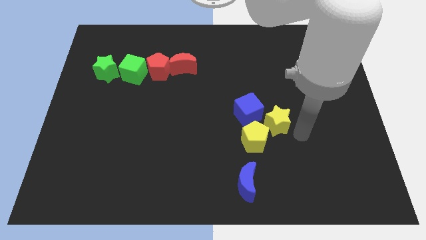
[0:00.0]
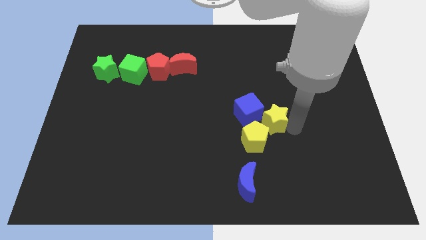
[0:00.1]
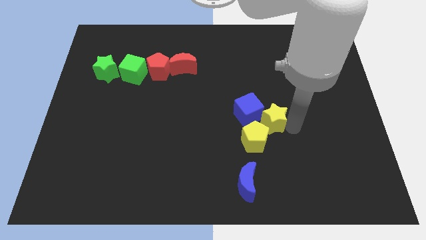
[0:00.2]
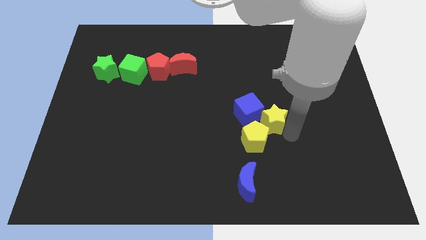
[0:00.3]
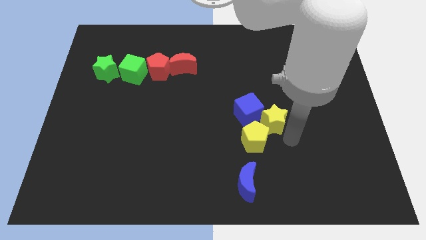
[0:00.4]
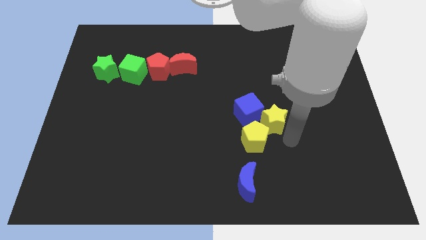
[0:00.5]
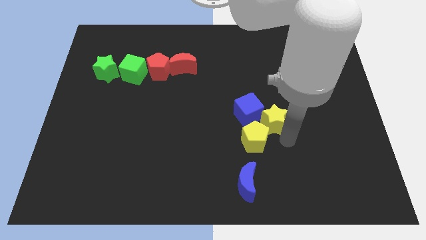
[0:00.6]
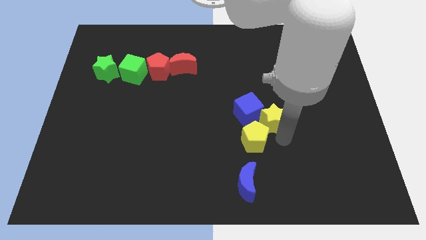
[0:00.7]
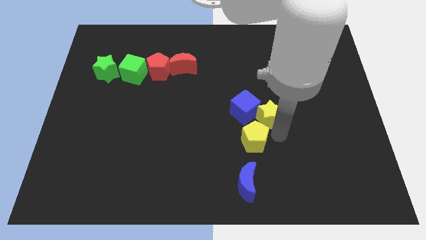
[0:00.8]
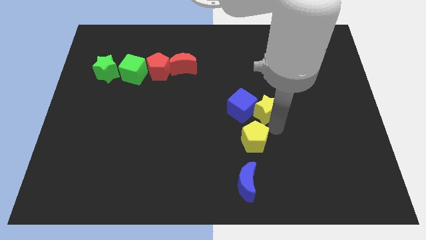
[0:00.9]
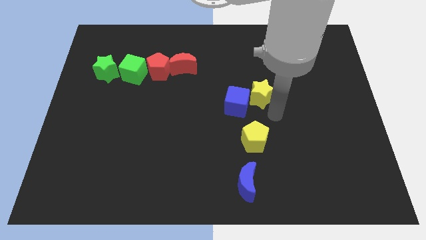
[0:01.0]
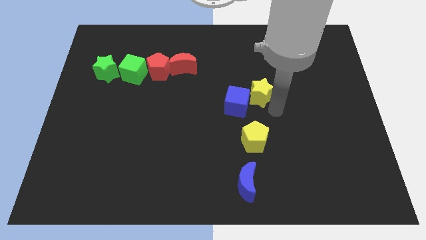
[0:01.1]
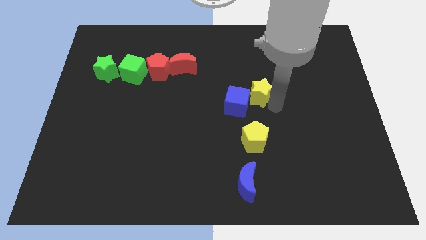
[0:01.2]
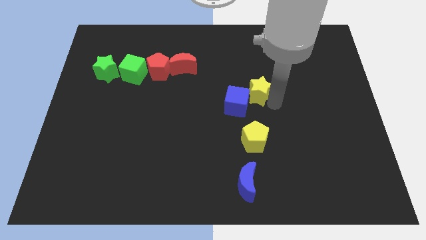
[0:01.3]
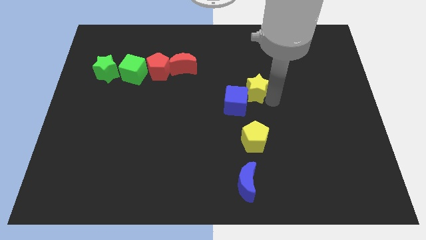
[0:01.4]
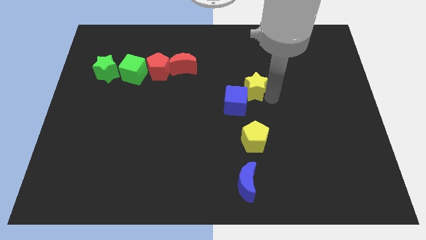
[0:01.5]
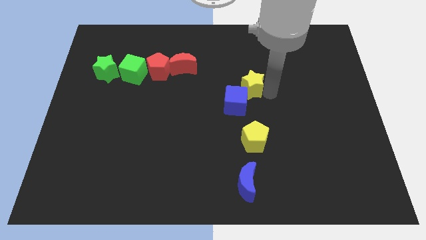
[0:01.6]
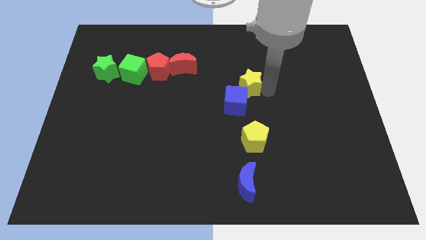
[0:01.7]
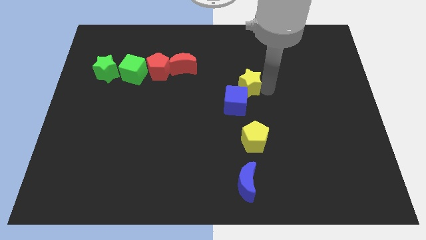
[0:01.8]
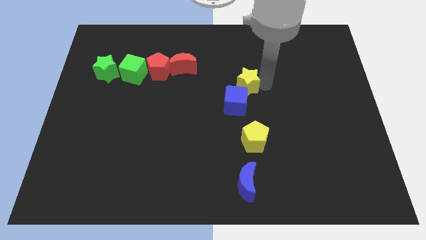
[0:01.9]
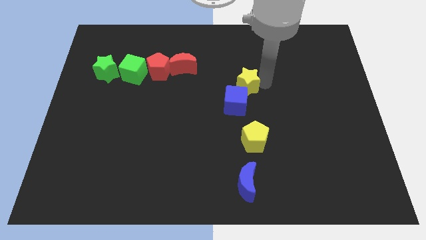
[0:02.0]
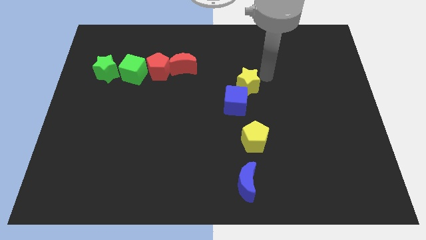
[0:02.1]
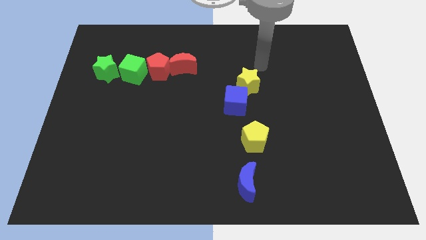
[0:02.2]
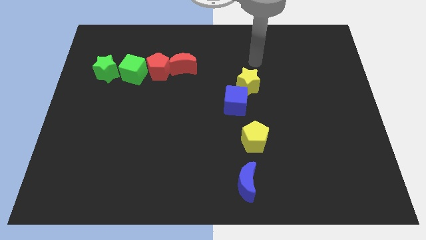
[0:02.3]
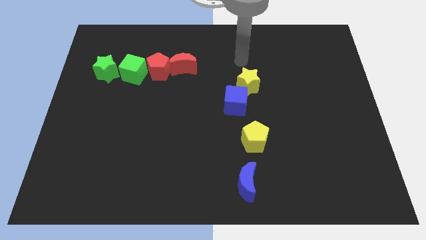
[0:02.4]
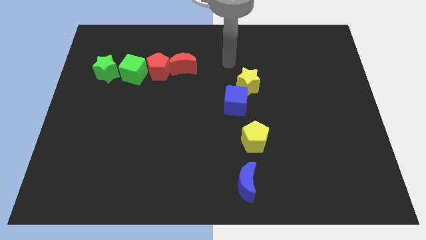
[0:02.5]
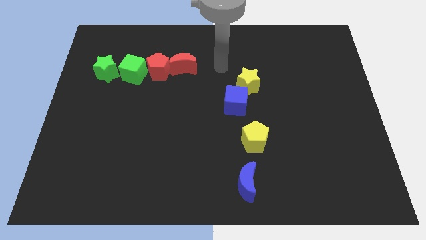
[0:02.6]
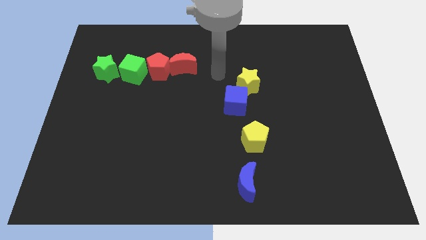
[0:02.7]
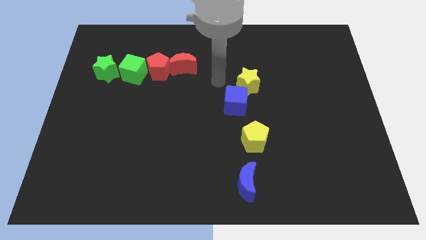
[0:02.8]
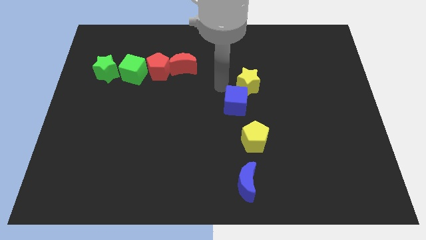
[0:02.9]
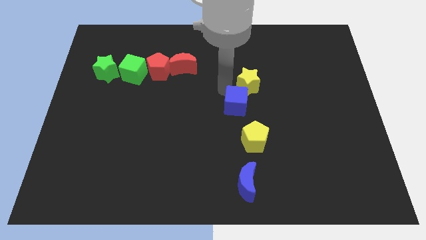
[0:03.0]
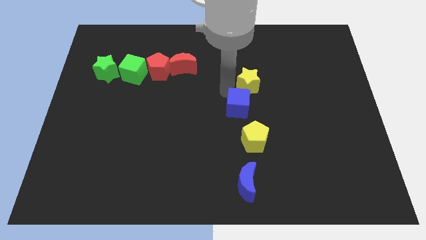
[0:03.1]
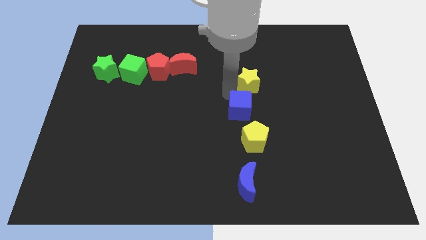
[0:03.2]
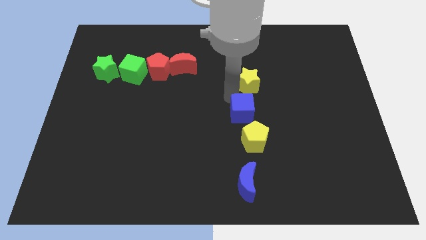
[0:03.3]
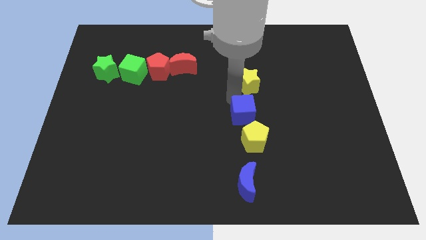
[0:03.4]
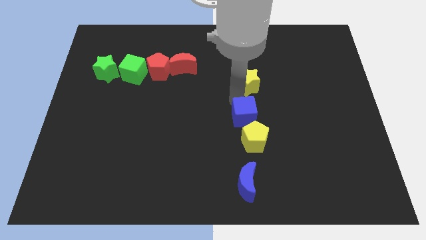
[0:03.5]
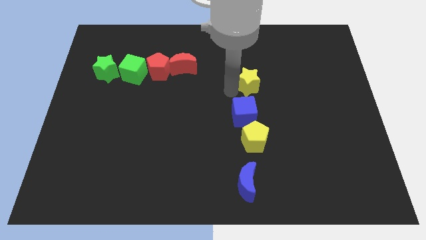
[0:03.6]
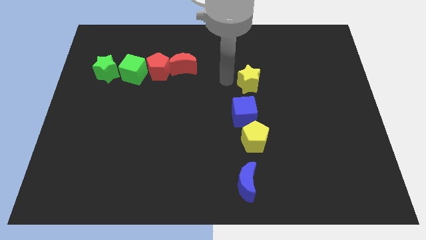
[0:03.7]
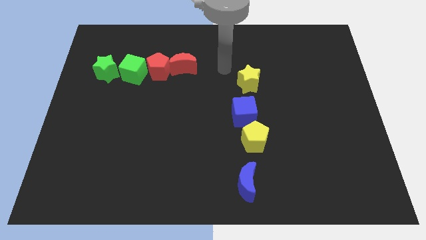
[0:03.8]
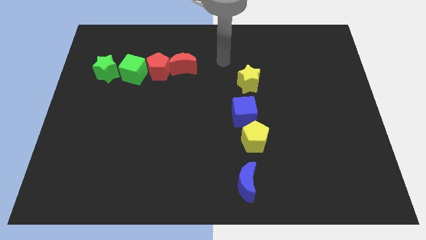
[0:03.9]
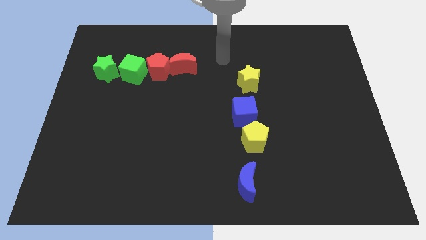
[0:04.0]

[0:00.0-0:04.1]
move the yellow star to the top side of the blue cube

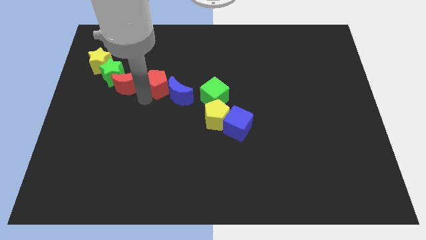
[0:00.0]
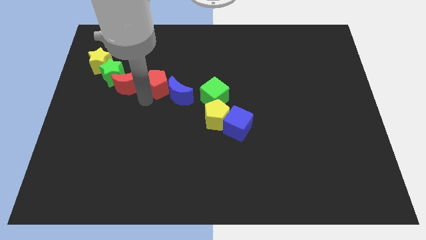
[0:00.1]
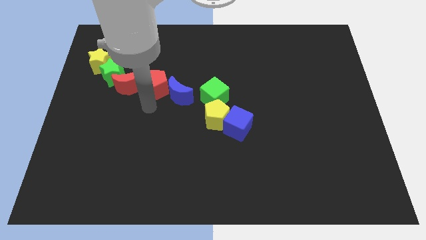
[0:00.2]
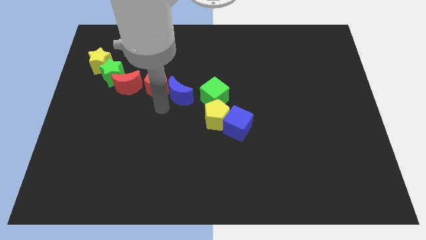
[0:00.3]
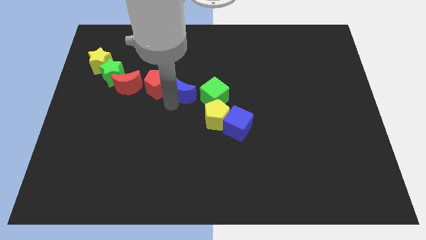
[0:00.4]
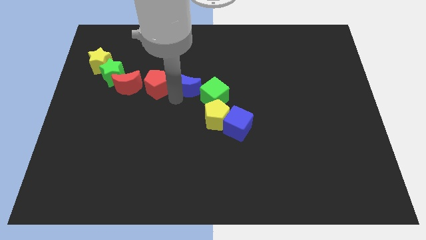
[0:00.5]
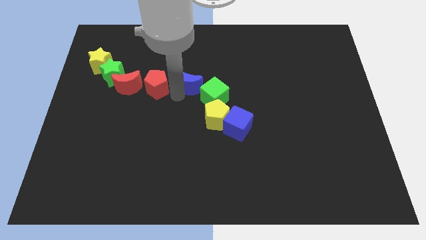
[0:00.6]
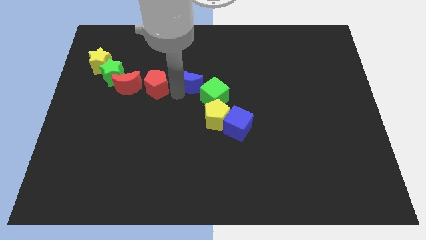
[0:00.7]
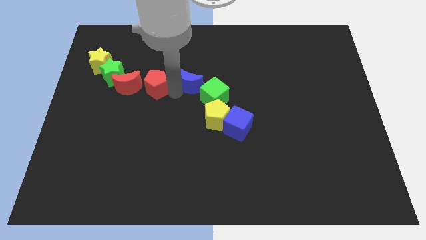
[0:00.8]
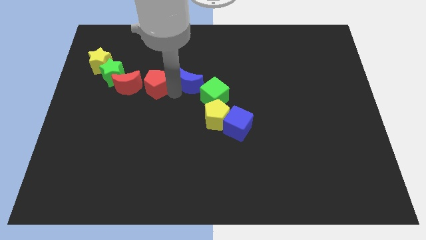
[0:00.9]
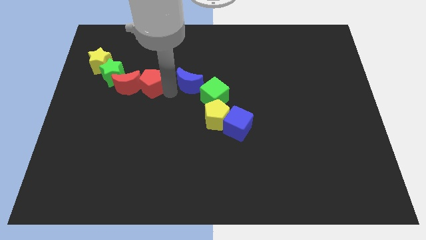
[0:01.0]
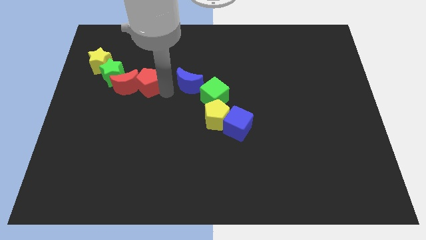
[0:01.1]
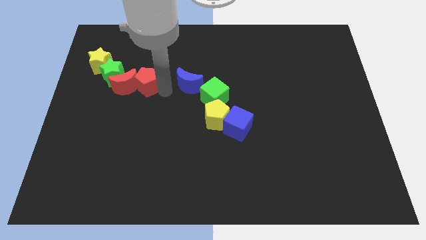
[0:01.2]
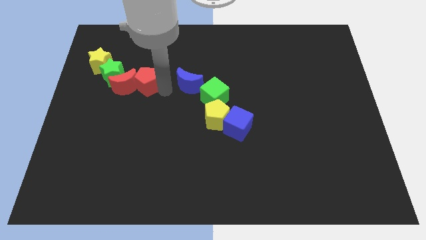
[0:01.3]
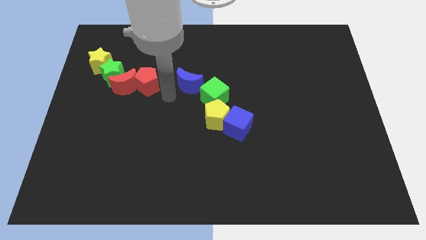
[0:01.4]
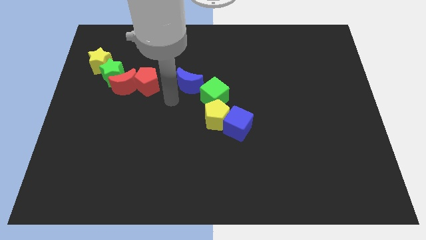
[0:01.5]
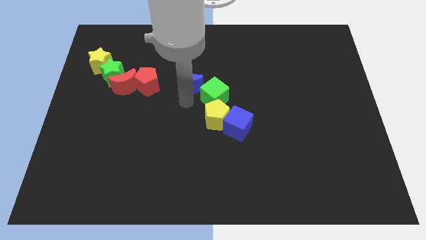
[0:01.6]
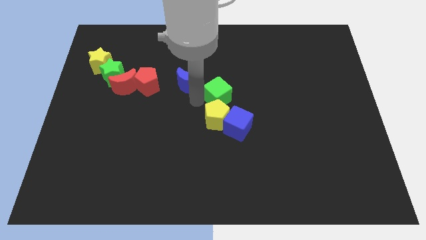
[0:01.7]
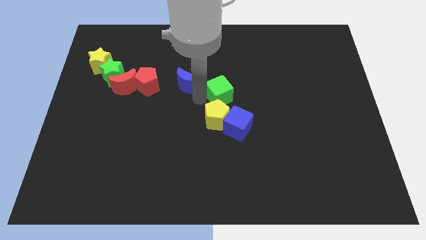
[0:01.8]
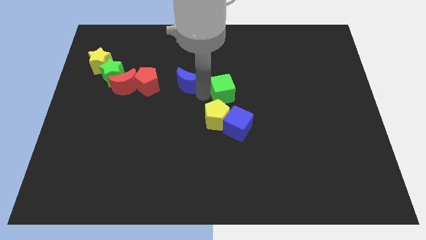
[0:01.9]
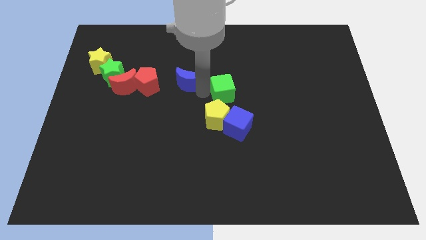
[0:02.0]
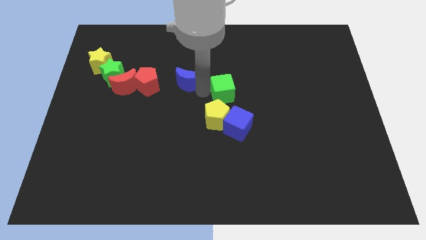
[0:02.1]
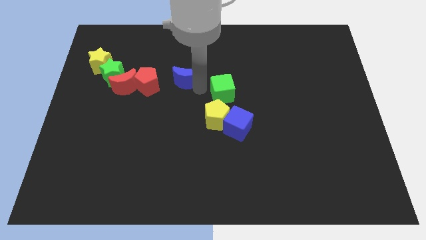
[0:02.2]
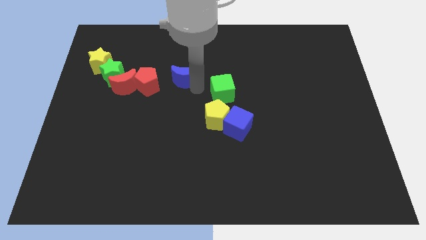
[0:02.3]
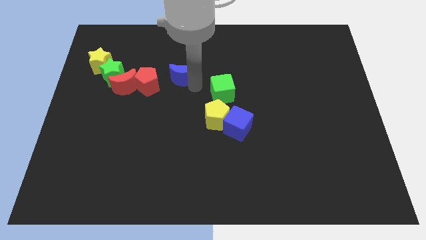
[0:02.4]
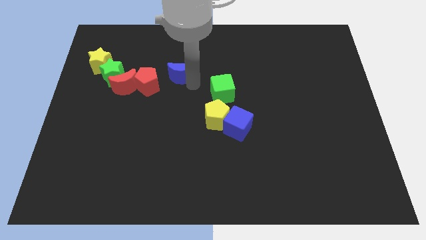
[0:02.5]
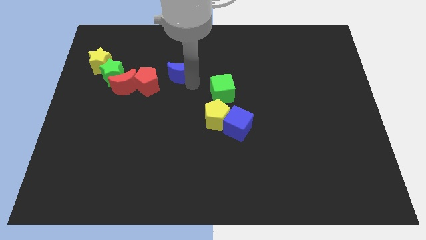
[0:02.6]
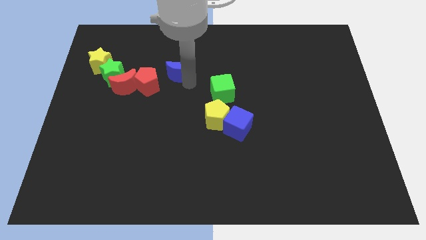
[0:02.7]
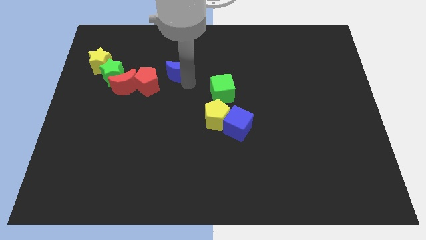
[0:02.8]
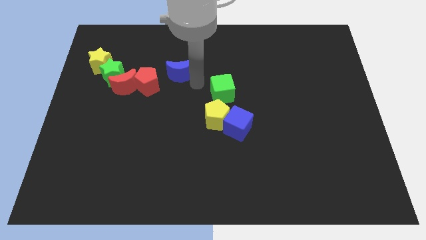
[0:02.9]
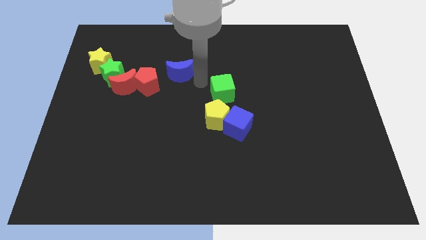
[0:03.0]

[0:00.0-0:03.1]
separate red pentagon and blue moon

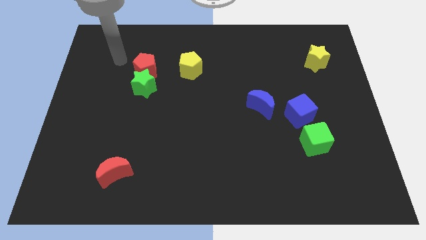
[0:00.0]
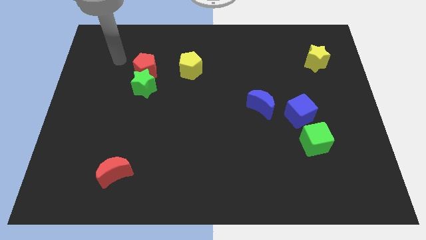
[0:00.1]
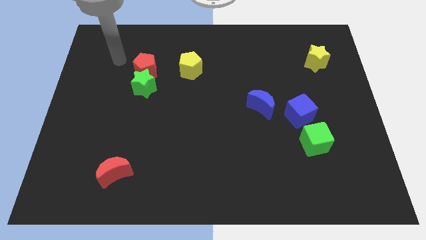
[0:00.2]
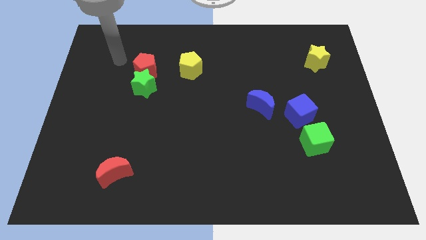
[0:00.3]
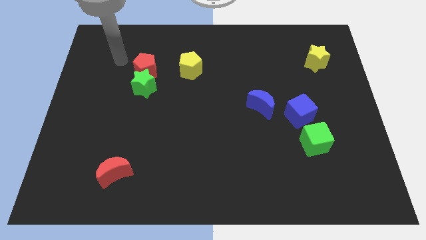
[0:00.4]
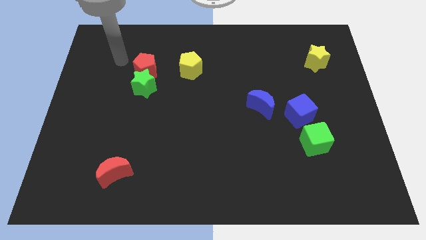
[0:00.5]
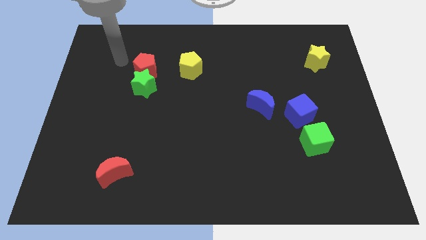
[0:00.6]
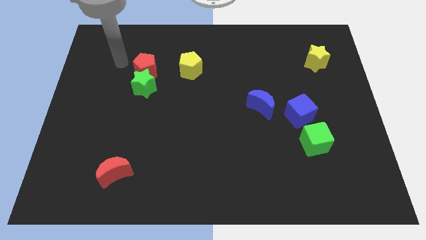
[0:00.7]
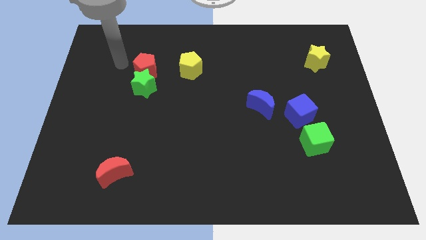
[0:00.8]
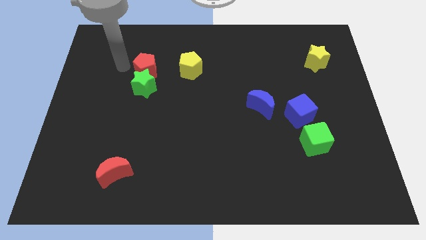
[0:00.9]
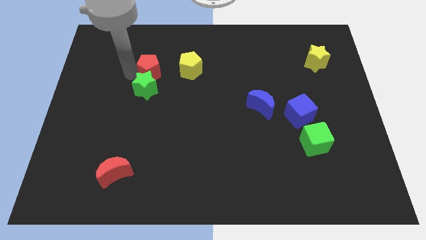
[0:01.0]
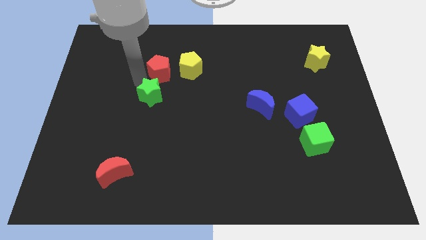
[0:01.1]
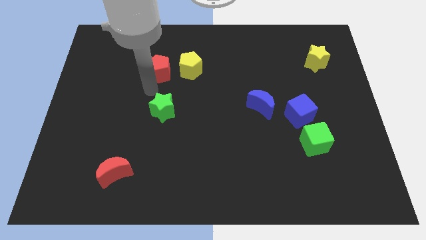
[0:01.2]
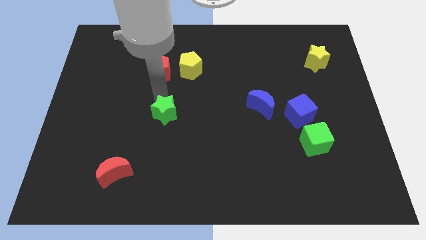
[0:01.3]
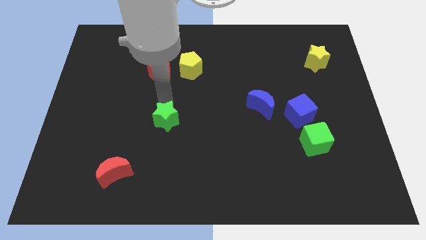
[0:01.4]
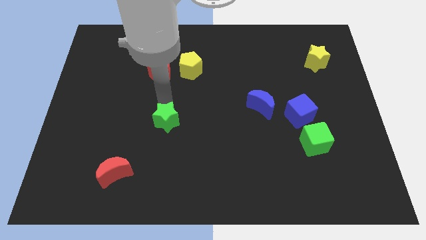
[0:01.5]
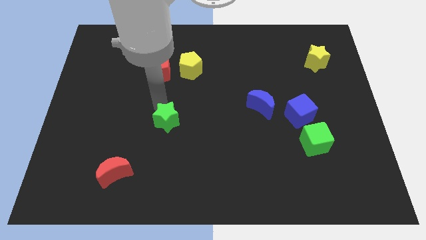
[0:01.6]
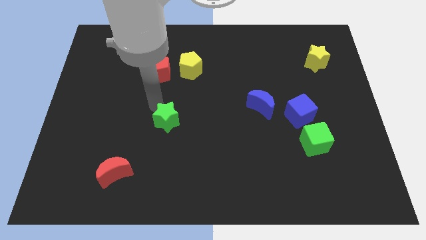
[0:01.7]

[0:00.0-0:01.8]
separate the green star from red pentagon
